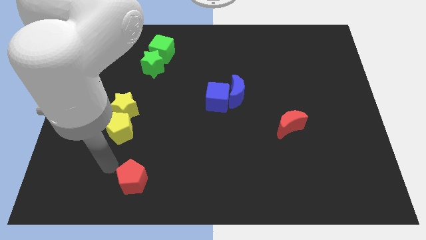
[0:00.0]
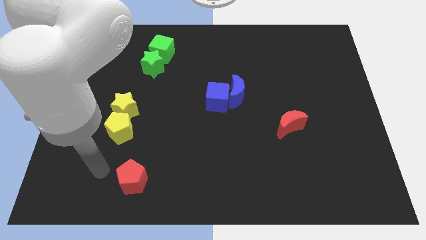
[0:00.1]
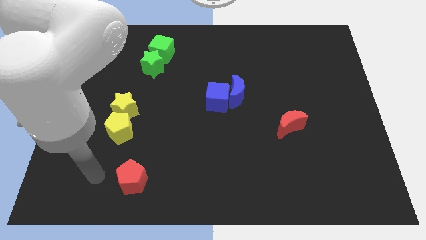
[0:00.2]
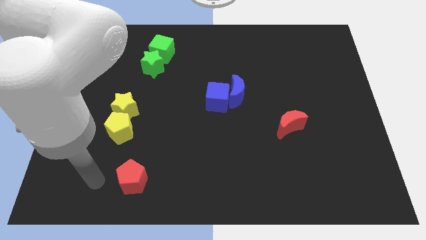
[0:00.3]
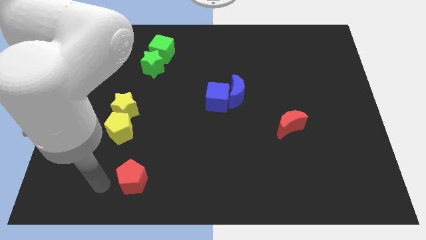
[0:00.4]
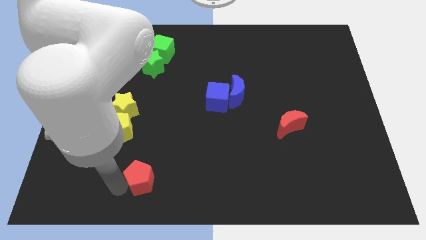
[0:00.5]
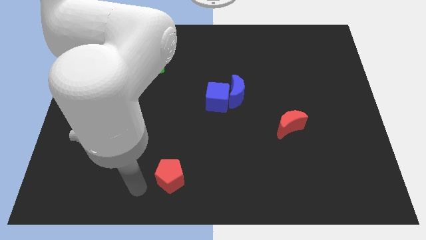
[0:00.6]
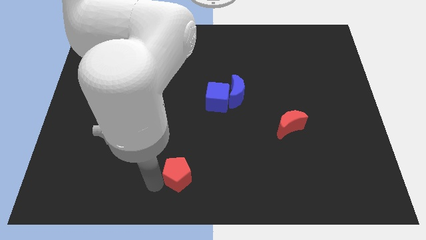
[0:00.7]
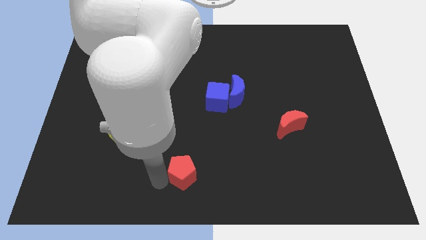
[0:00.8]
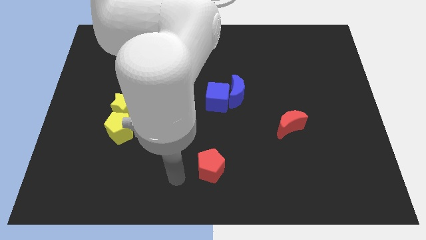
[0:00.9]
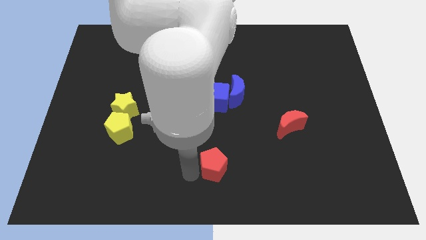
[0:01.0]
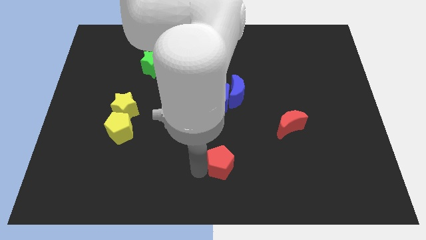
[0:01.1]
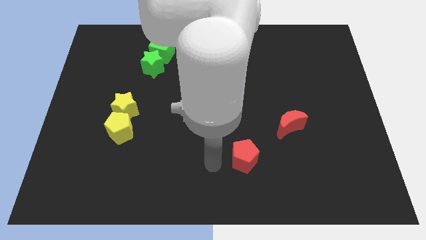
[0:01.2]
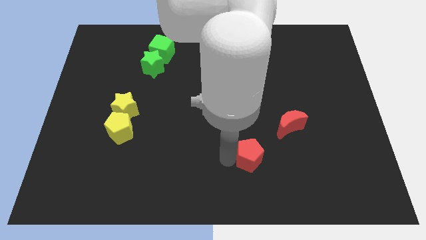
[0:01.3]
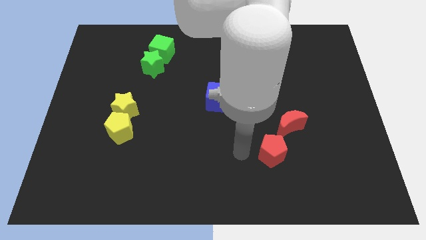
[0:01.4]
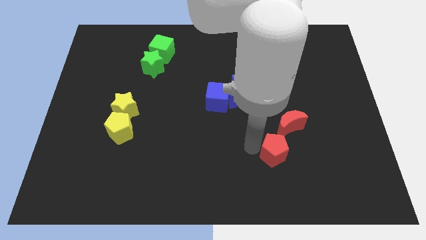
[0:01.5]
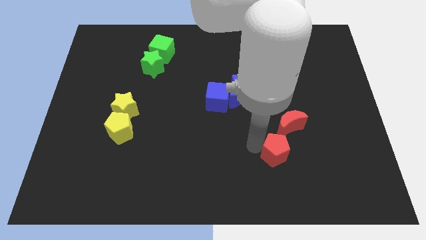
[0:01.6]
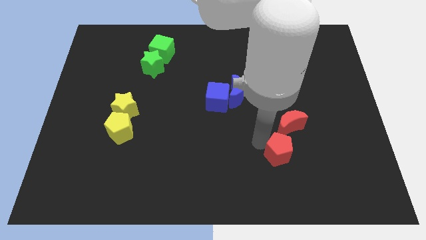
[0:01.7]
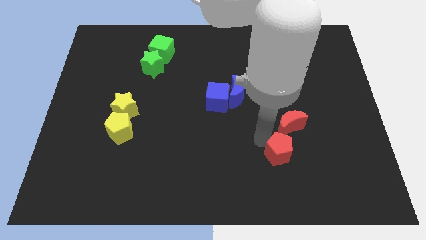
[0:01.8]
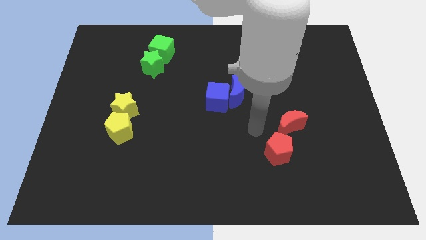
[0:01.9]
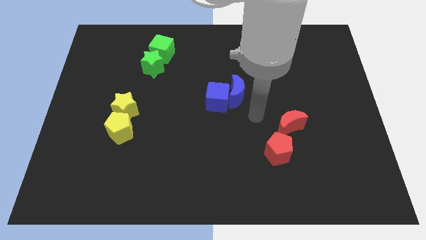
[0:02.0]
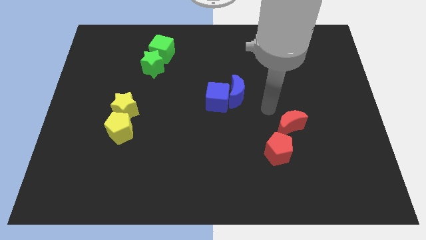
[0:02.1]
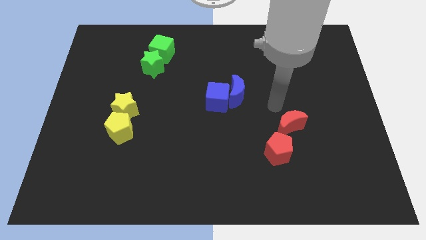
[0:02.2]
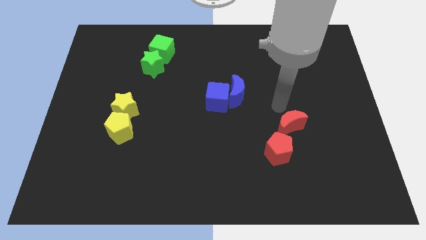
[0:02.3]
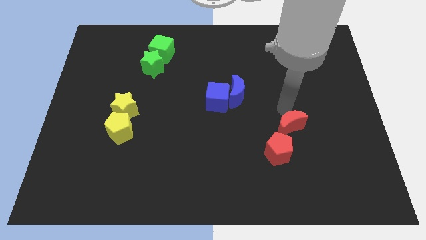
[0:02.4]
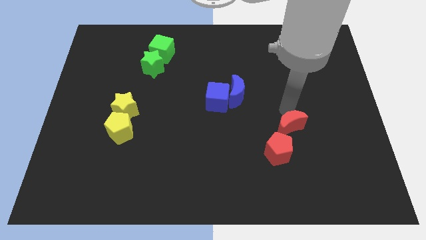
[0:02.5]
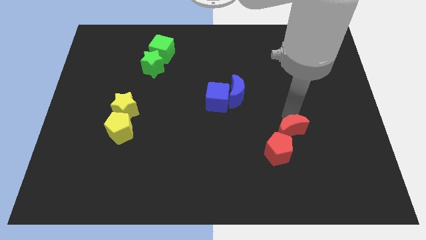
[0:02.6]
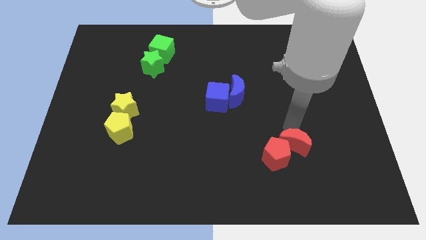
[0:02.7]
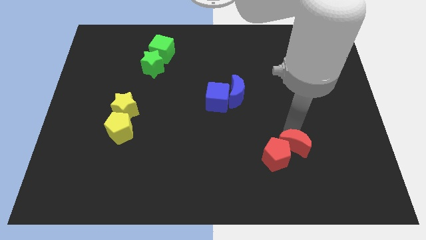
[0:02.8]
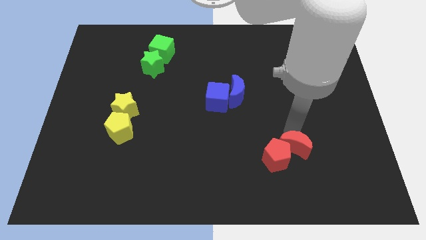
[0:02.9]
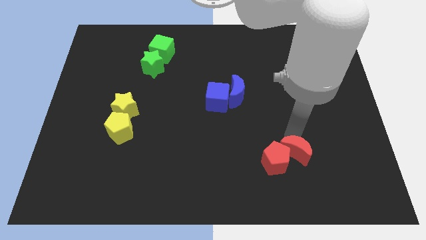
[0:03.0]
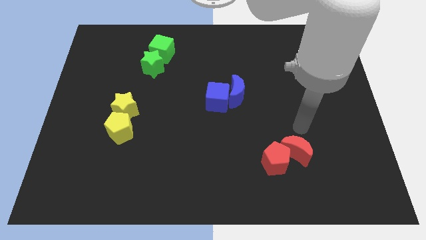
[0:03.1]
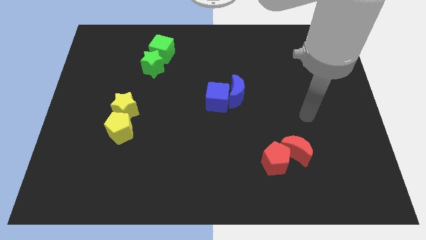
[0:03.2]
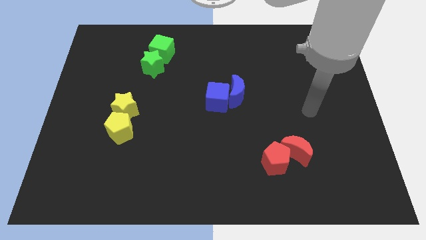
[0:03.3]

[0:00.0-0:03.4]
push the red pentagon into the red crescent

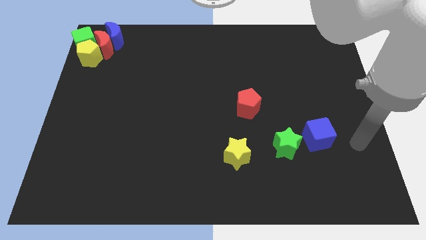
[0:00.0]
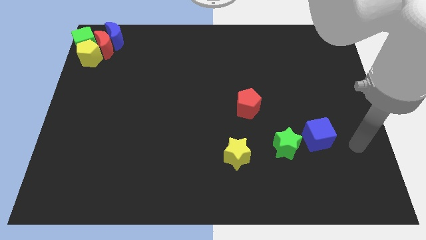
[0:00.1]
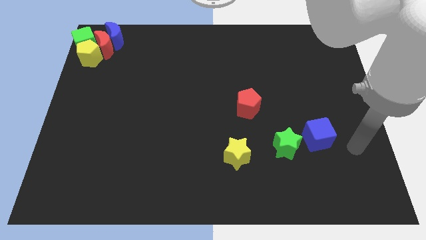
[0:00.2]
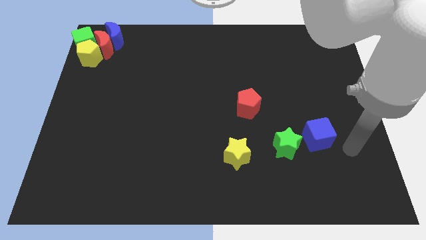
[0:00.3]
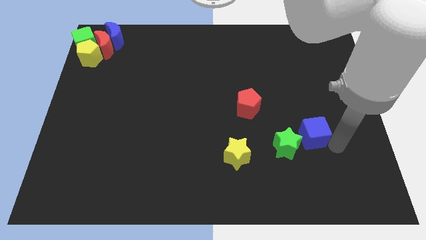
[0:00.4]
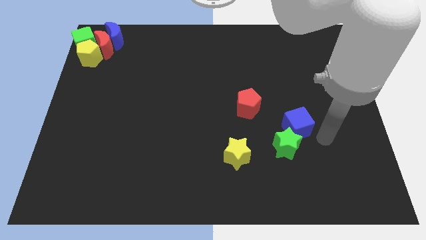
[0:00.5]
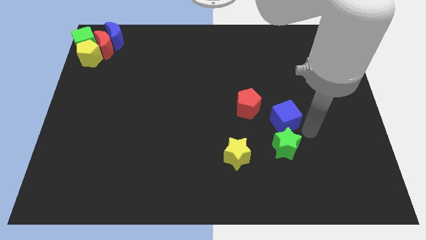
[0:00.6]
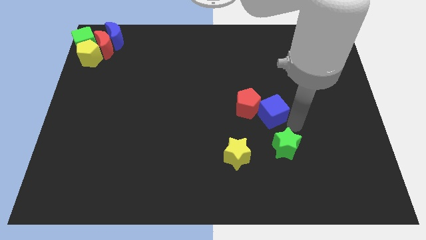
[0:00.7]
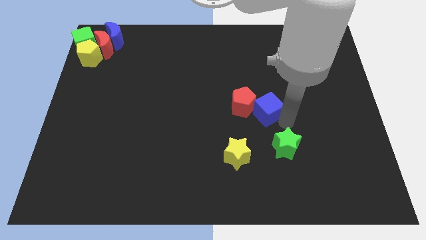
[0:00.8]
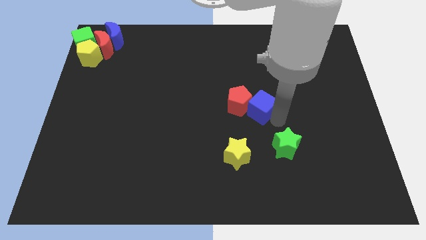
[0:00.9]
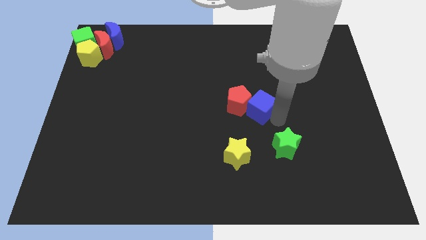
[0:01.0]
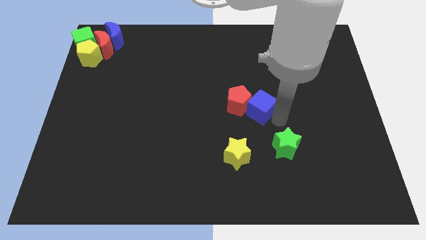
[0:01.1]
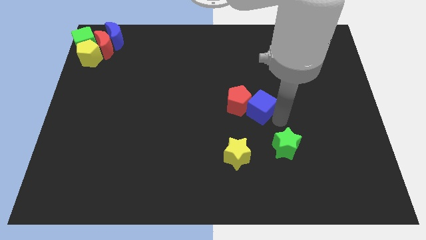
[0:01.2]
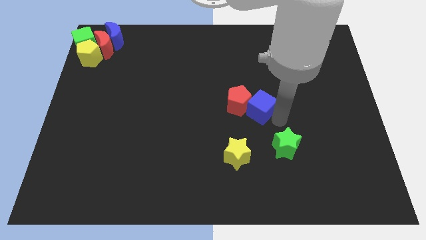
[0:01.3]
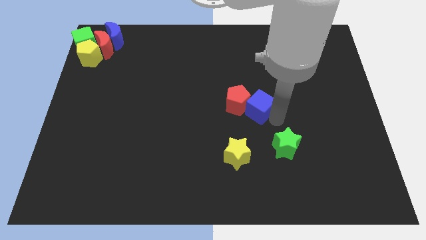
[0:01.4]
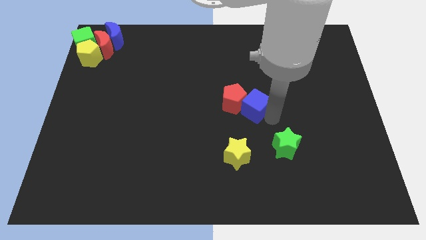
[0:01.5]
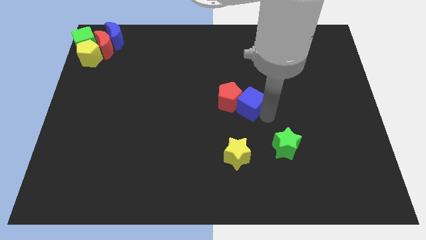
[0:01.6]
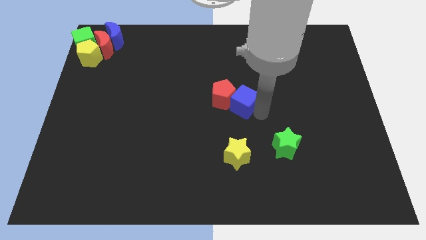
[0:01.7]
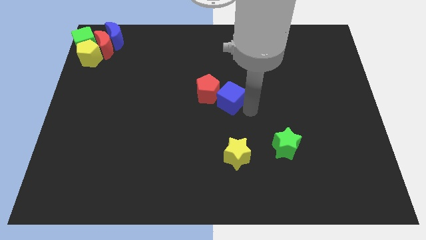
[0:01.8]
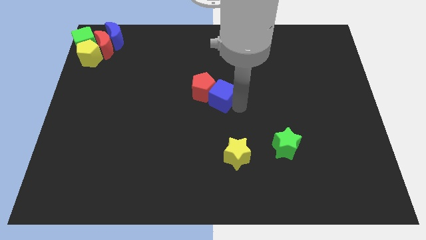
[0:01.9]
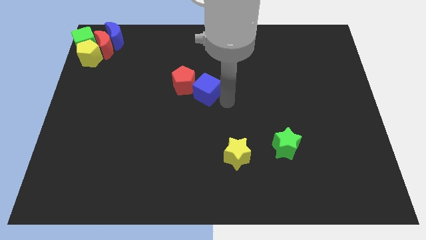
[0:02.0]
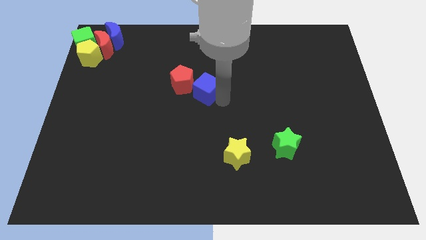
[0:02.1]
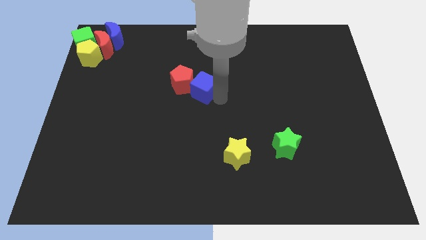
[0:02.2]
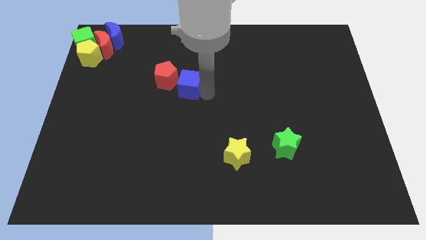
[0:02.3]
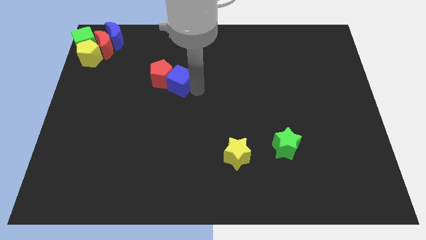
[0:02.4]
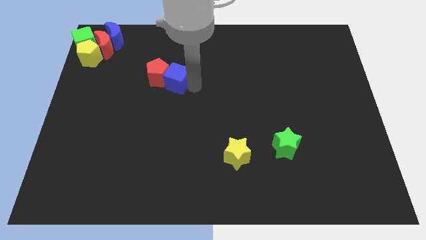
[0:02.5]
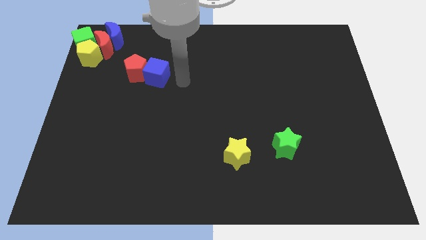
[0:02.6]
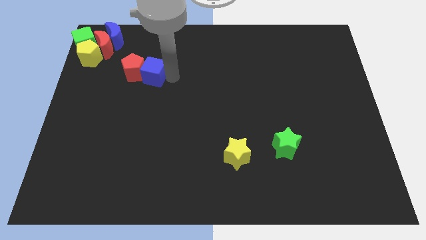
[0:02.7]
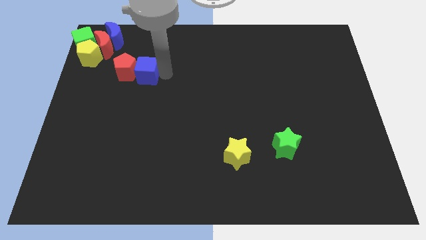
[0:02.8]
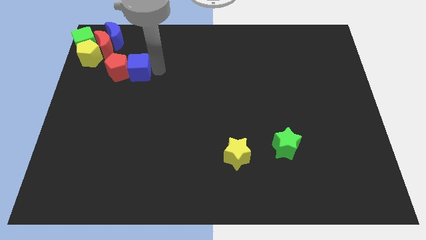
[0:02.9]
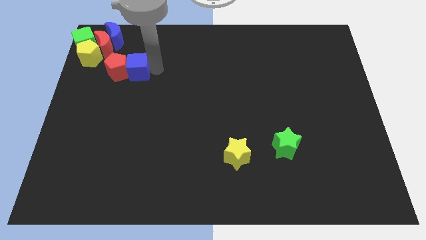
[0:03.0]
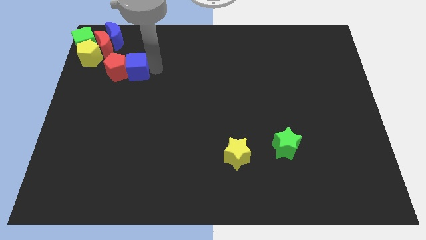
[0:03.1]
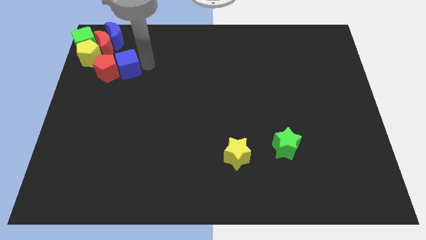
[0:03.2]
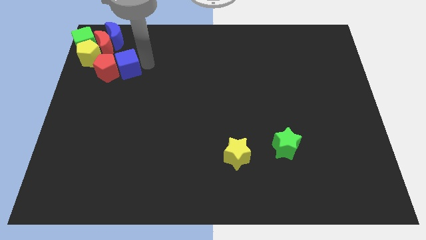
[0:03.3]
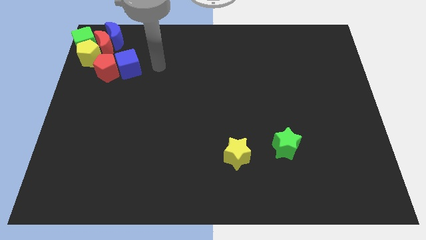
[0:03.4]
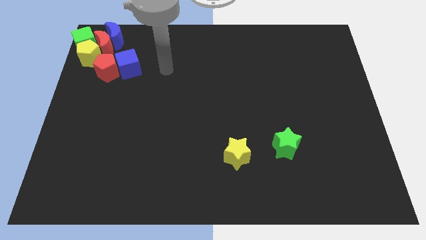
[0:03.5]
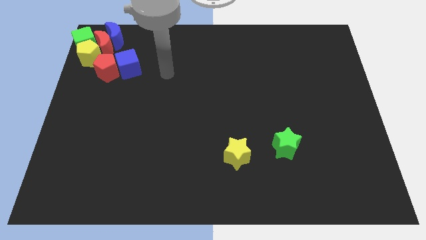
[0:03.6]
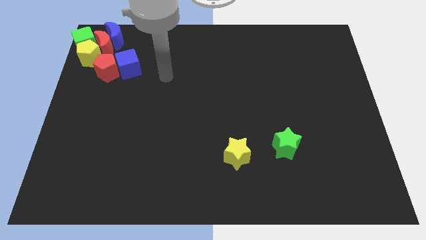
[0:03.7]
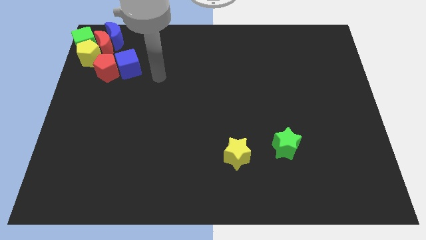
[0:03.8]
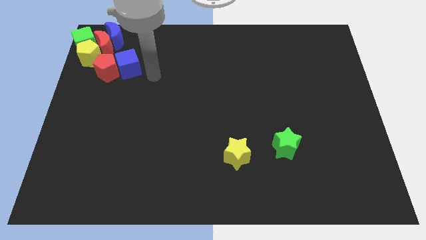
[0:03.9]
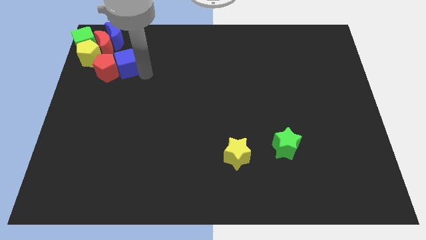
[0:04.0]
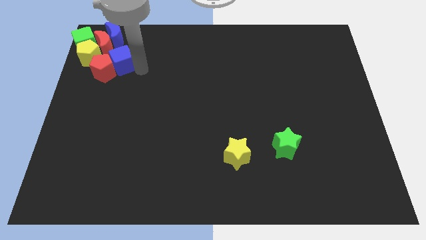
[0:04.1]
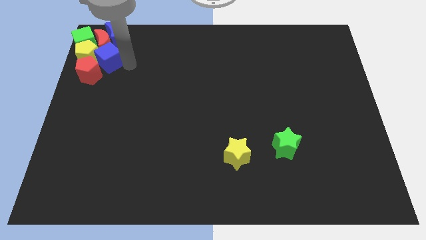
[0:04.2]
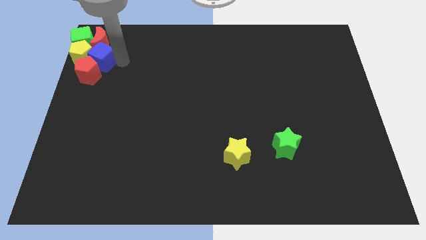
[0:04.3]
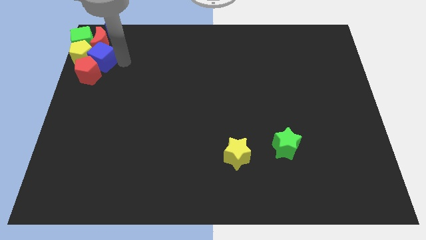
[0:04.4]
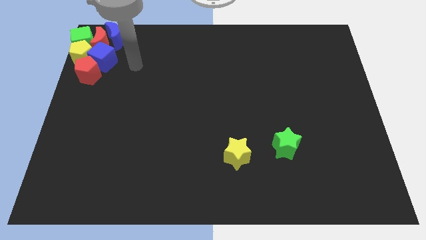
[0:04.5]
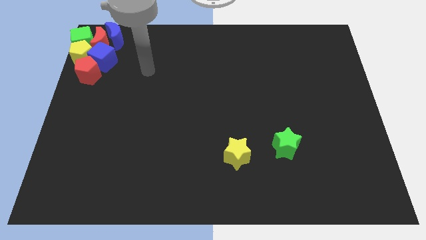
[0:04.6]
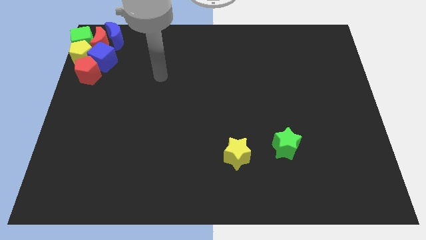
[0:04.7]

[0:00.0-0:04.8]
push the blue cube and the red pentagon towards the top left corner of the board

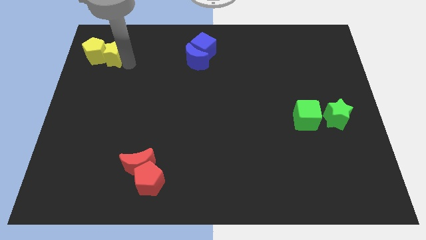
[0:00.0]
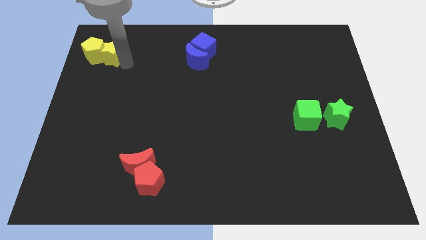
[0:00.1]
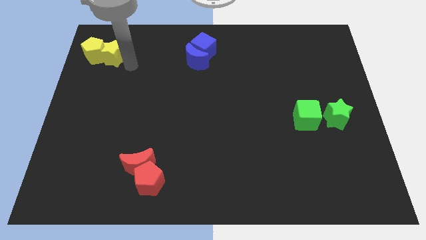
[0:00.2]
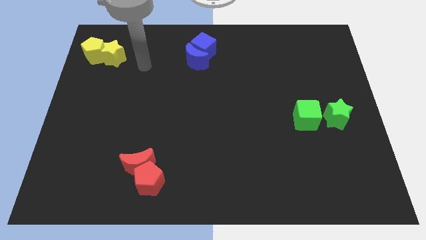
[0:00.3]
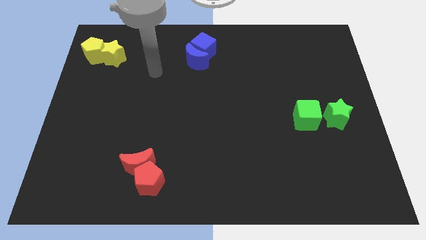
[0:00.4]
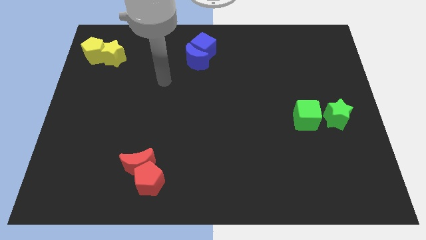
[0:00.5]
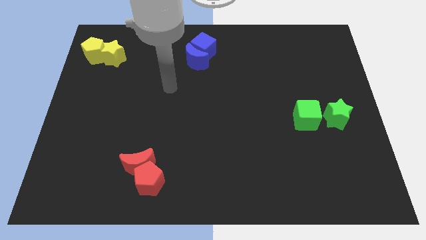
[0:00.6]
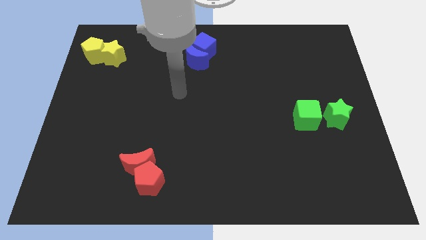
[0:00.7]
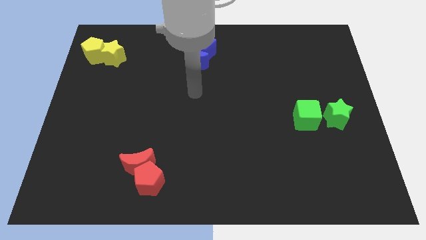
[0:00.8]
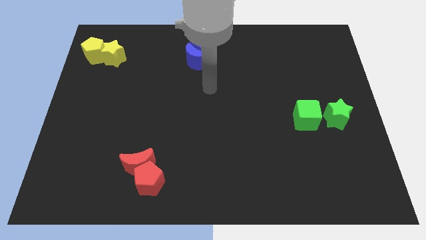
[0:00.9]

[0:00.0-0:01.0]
move your arm to the bottom side of the blue moon
